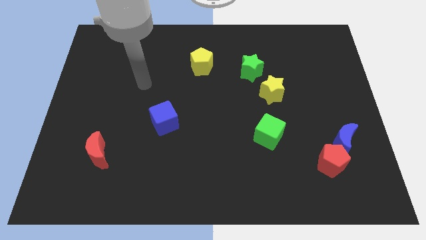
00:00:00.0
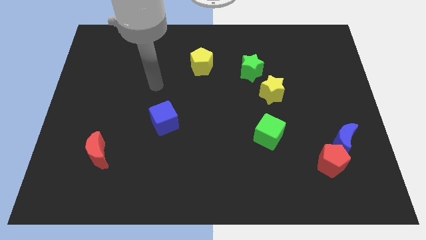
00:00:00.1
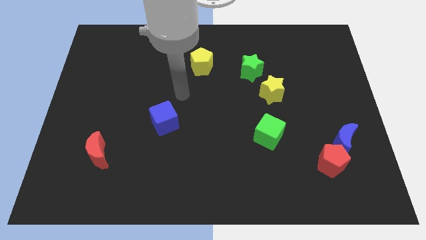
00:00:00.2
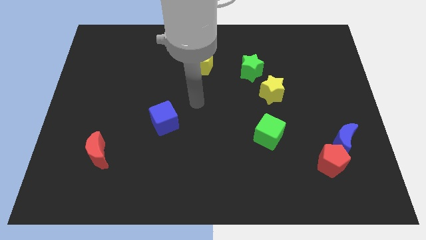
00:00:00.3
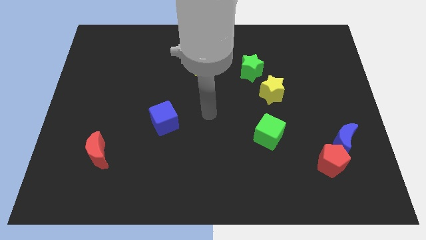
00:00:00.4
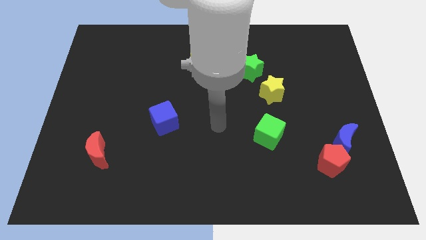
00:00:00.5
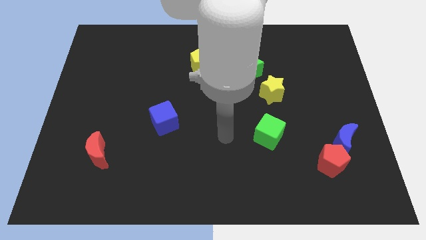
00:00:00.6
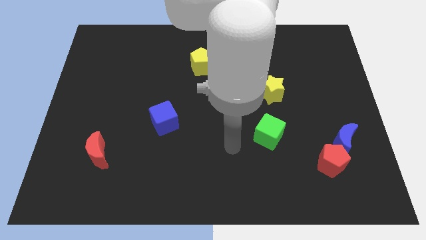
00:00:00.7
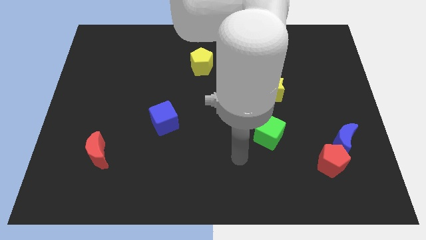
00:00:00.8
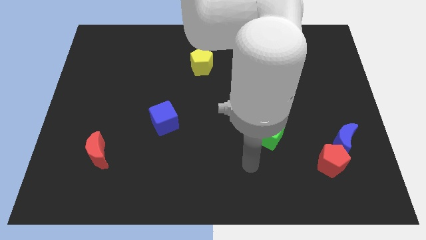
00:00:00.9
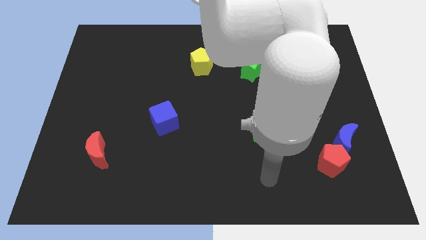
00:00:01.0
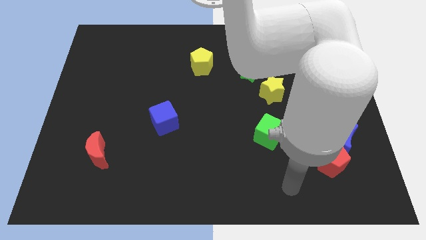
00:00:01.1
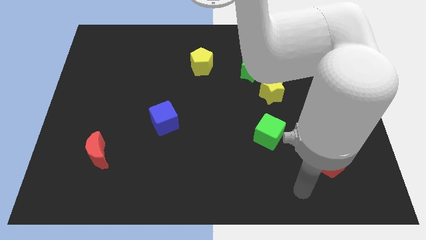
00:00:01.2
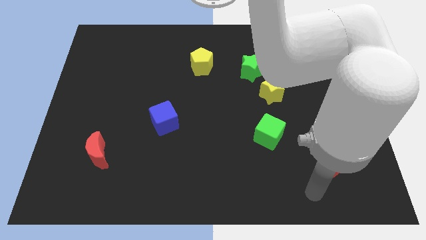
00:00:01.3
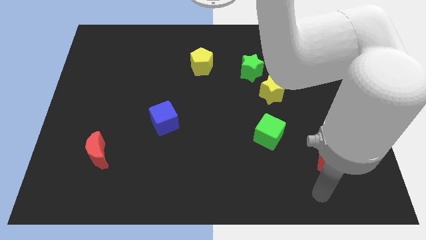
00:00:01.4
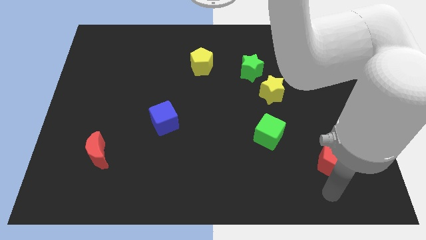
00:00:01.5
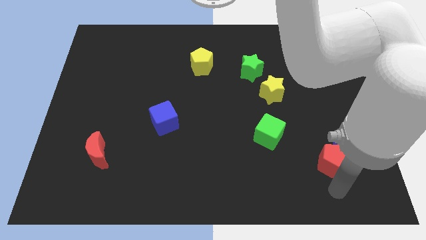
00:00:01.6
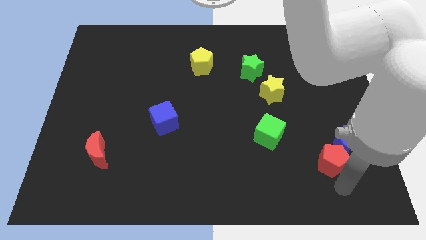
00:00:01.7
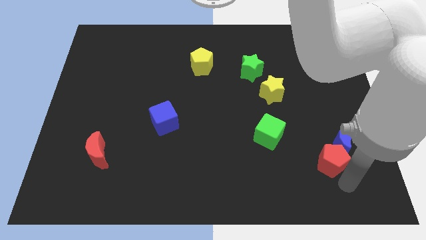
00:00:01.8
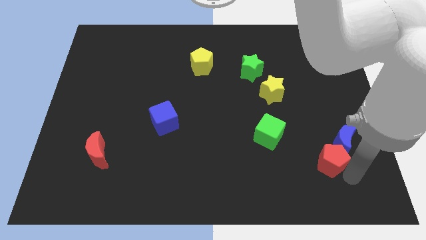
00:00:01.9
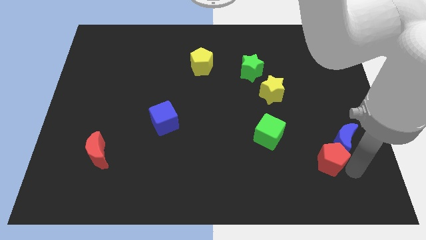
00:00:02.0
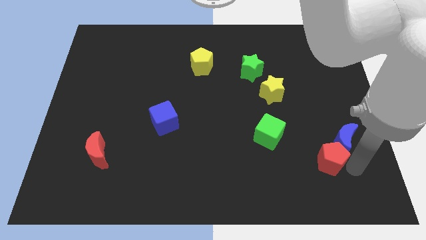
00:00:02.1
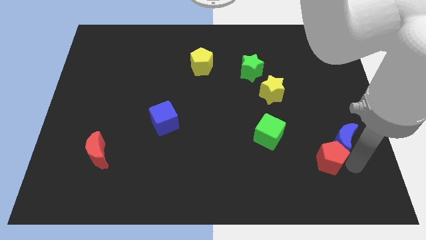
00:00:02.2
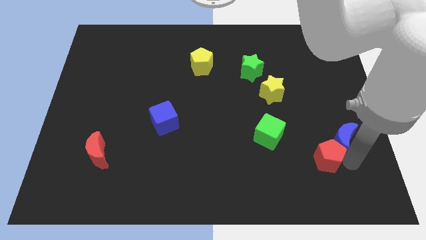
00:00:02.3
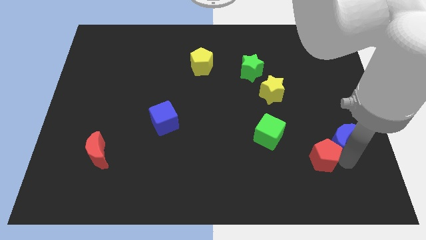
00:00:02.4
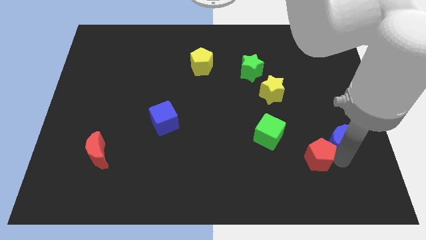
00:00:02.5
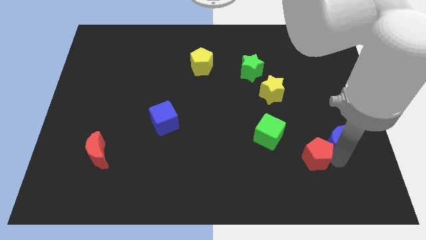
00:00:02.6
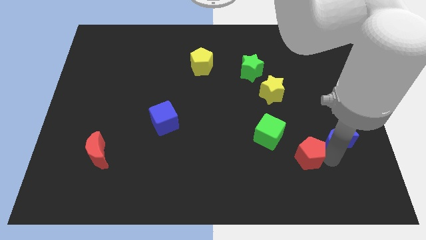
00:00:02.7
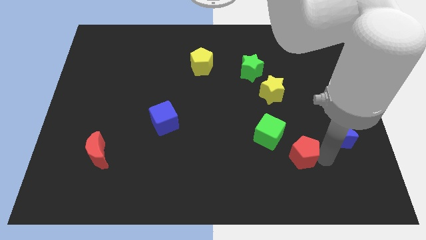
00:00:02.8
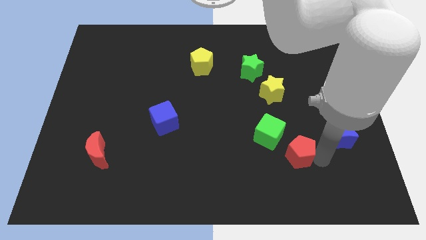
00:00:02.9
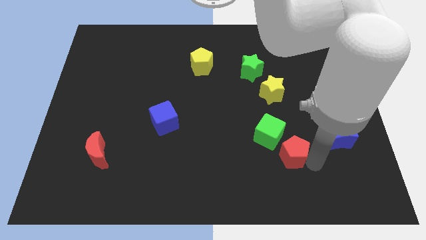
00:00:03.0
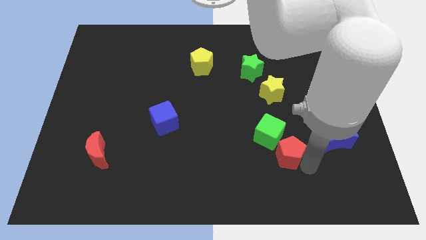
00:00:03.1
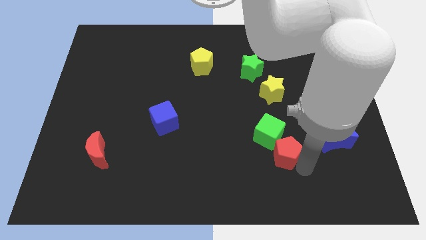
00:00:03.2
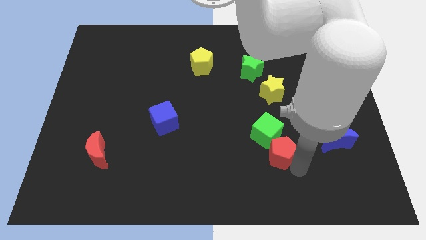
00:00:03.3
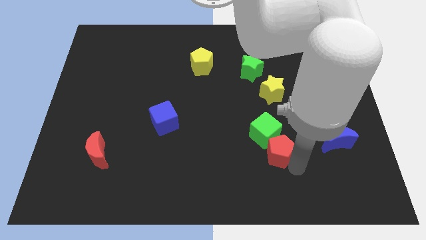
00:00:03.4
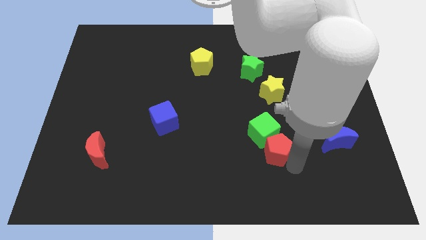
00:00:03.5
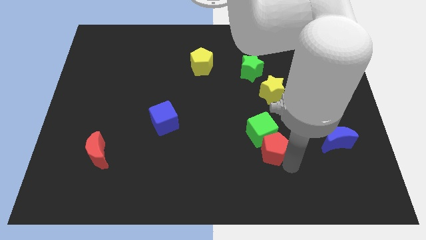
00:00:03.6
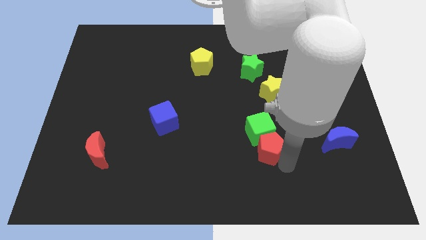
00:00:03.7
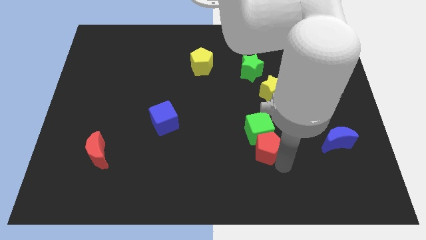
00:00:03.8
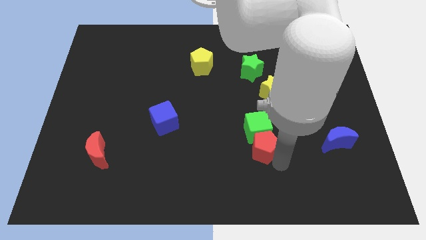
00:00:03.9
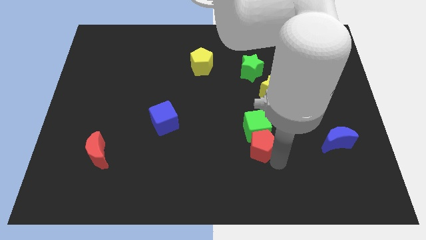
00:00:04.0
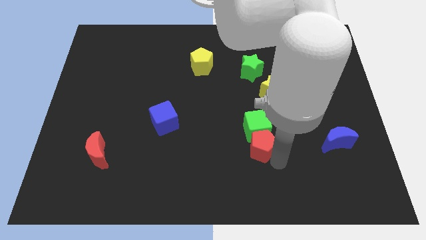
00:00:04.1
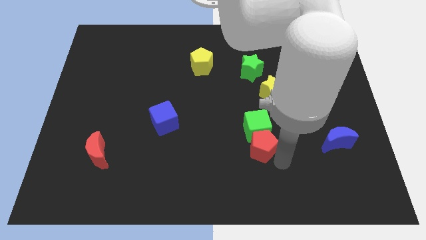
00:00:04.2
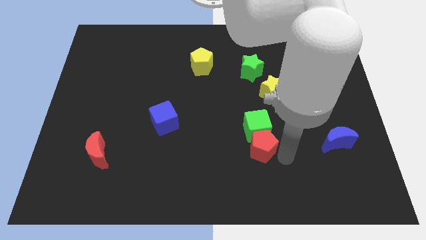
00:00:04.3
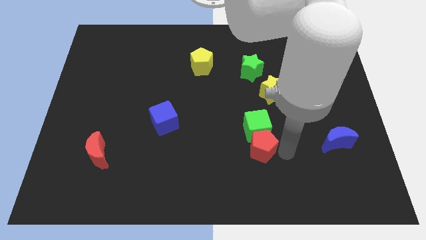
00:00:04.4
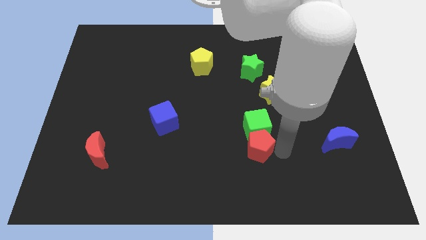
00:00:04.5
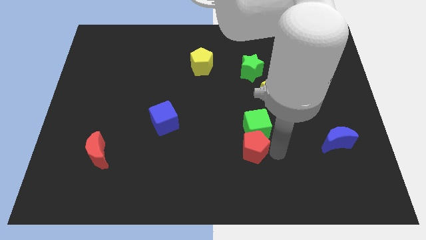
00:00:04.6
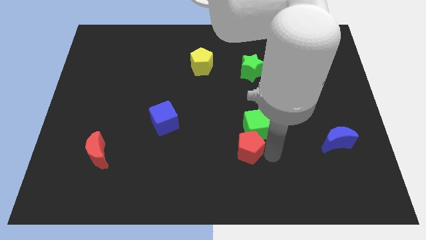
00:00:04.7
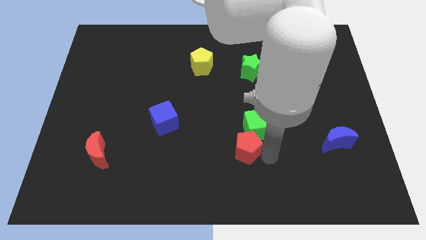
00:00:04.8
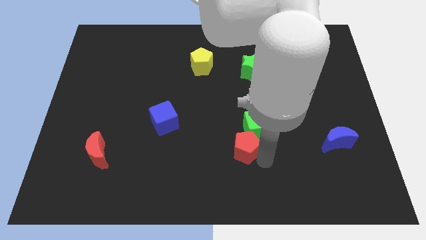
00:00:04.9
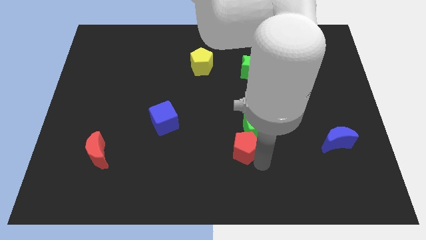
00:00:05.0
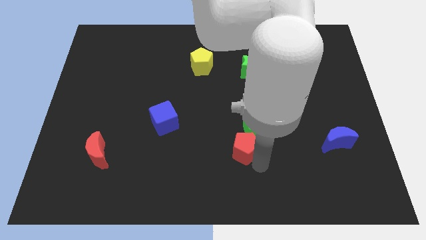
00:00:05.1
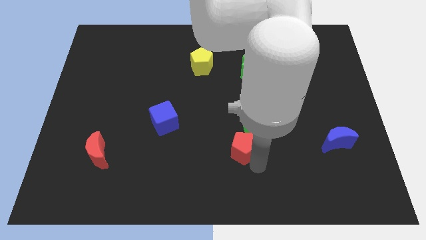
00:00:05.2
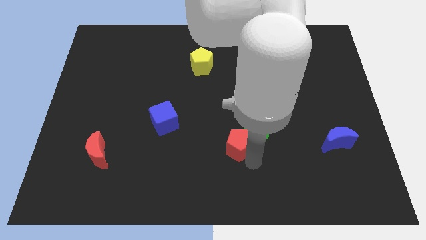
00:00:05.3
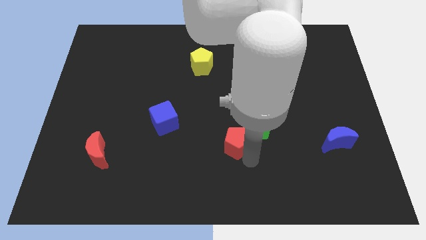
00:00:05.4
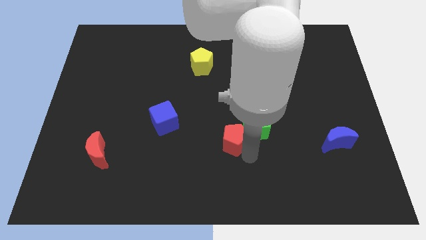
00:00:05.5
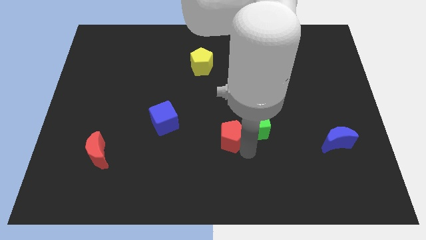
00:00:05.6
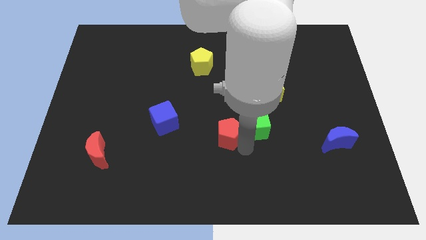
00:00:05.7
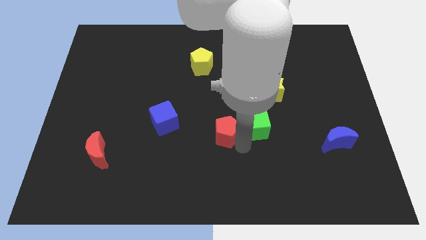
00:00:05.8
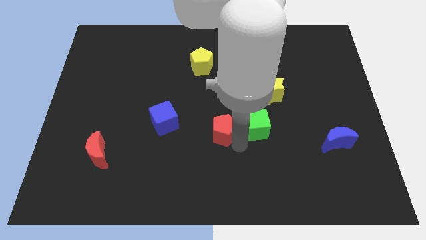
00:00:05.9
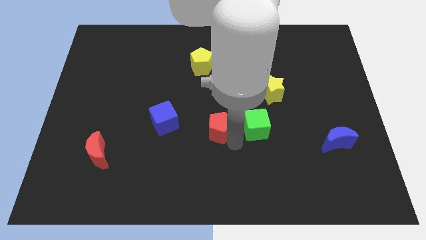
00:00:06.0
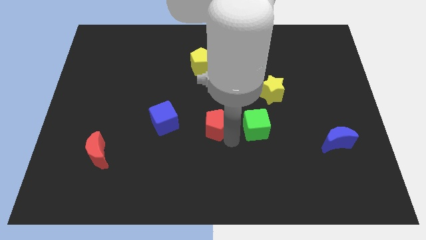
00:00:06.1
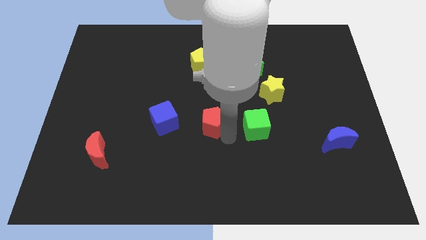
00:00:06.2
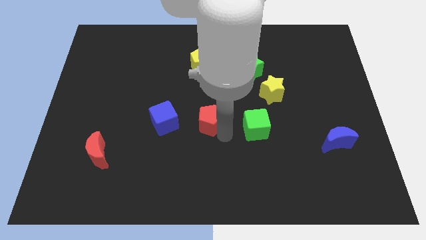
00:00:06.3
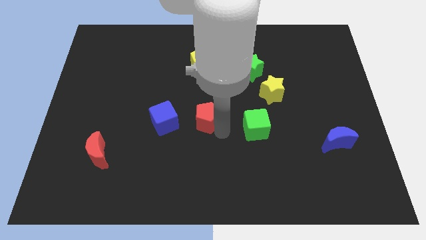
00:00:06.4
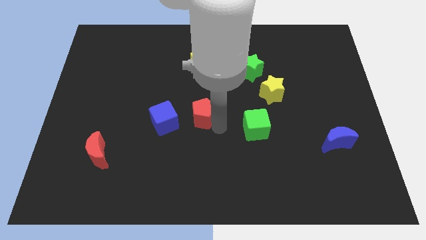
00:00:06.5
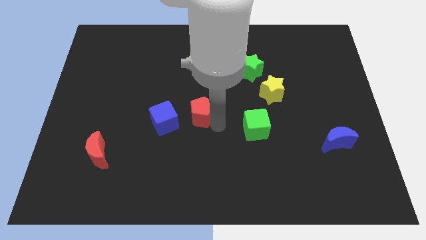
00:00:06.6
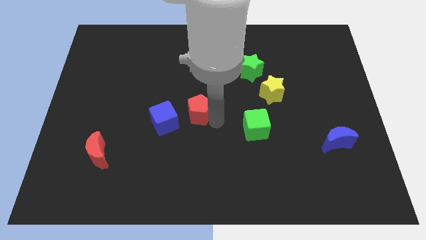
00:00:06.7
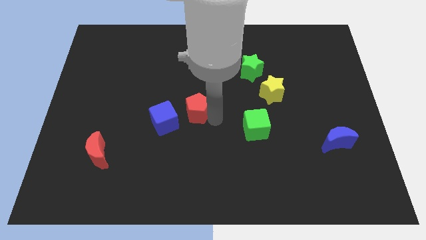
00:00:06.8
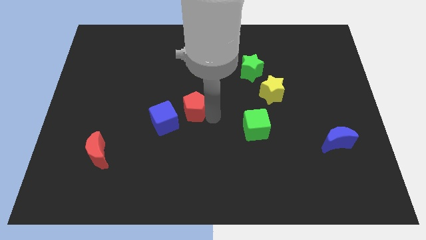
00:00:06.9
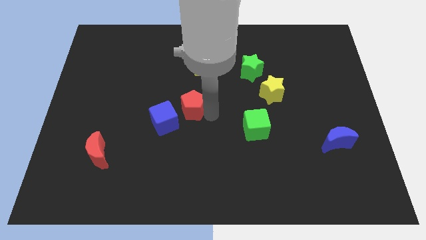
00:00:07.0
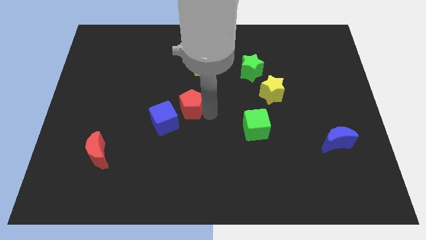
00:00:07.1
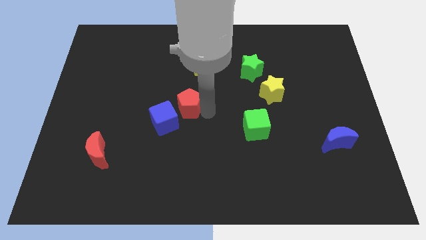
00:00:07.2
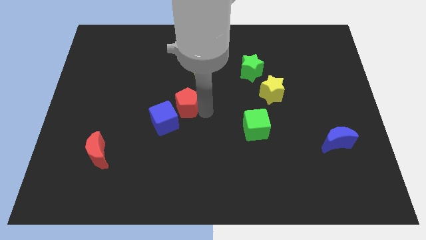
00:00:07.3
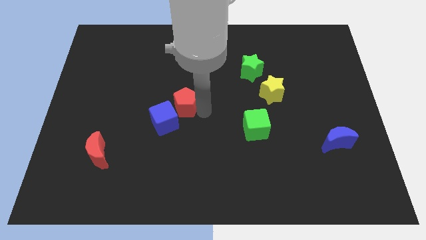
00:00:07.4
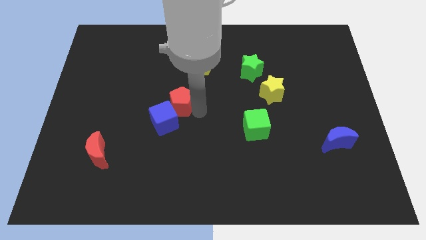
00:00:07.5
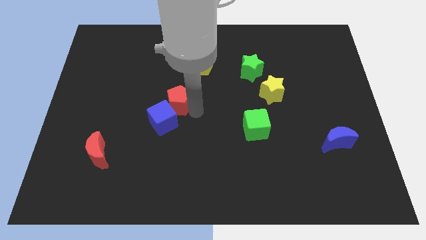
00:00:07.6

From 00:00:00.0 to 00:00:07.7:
slide the red pentagon next to the blue cube

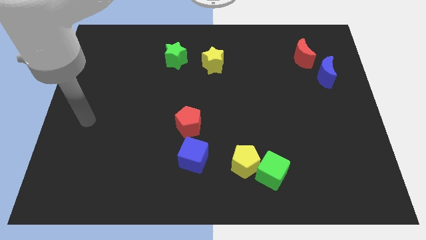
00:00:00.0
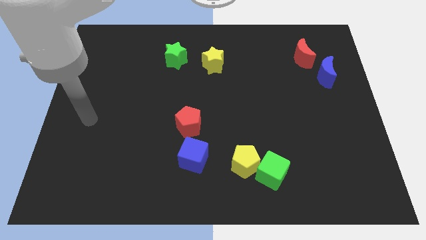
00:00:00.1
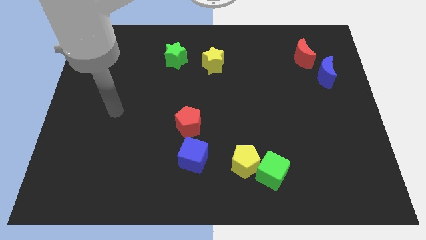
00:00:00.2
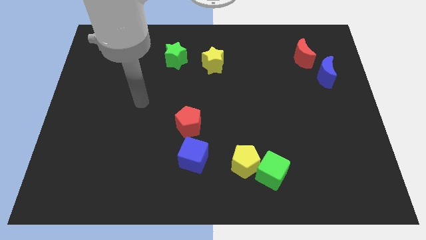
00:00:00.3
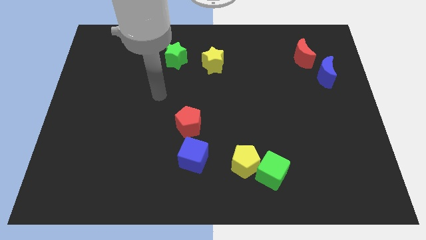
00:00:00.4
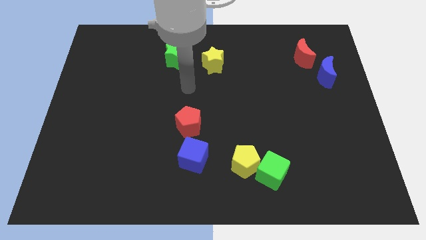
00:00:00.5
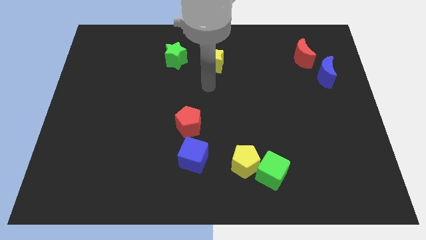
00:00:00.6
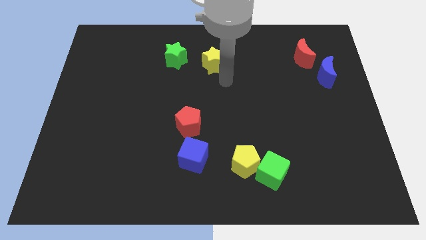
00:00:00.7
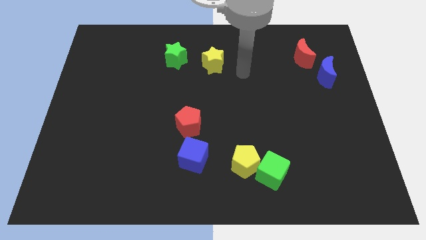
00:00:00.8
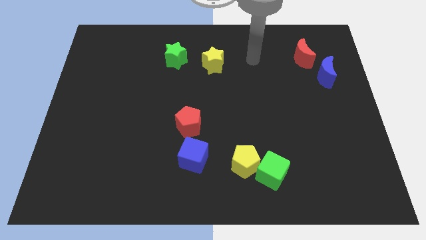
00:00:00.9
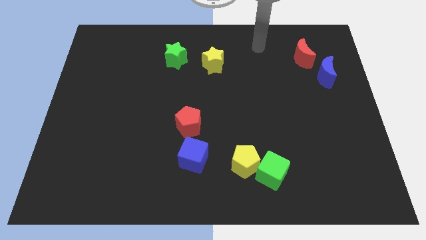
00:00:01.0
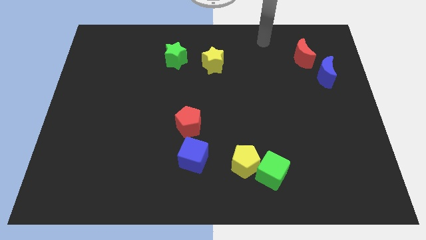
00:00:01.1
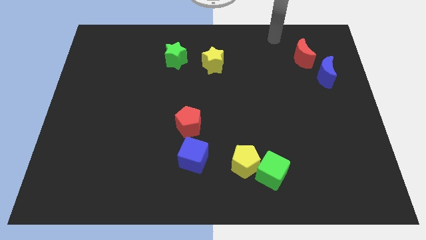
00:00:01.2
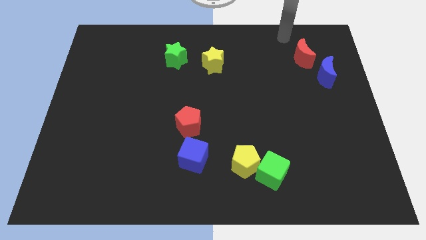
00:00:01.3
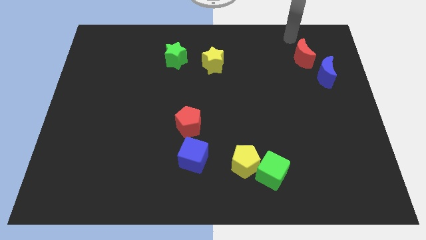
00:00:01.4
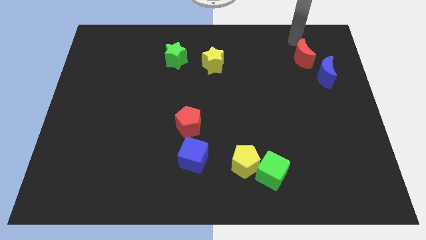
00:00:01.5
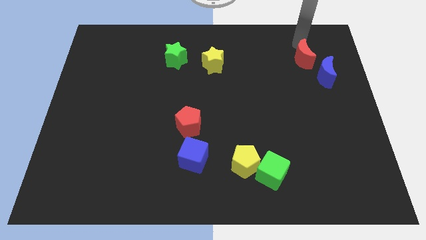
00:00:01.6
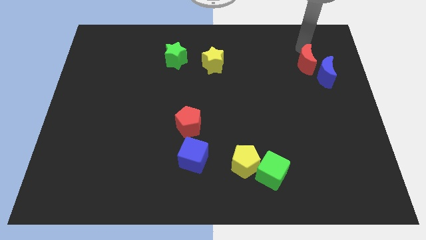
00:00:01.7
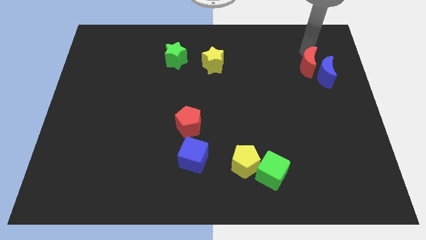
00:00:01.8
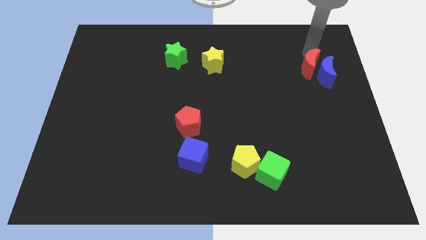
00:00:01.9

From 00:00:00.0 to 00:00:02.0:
put the red moon next to the blue moon
